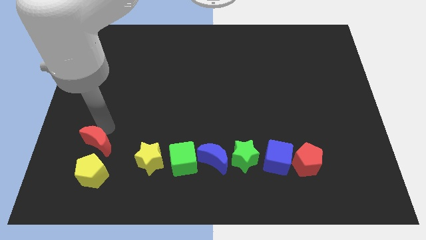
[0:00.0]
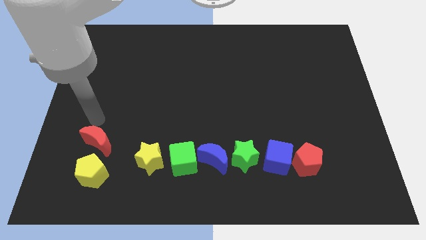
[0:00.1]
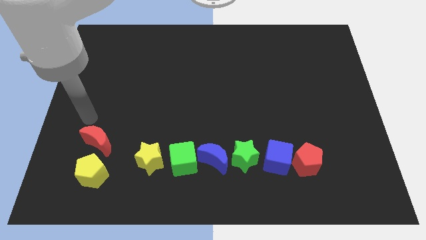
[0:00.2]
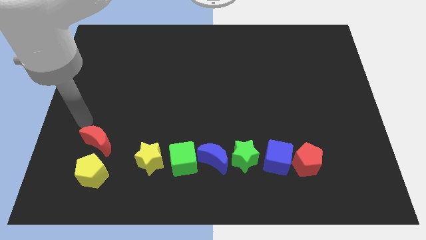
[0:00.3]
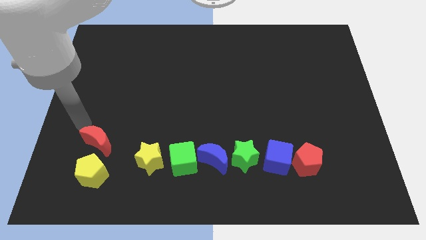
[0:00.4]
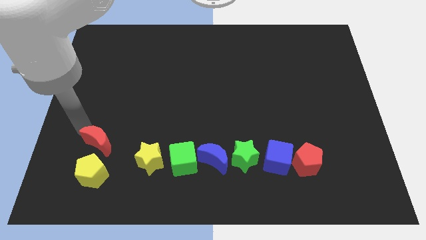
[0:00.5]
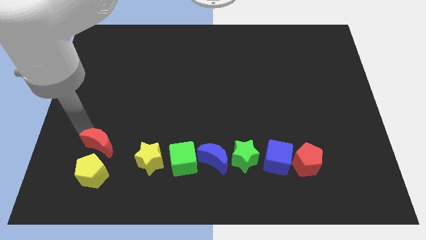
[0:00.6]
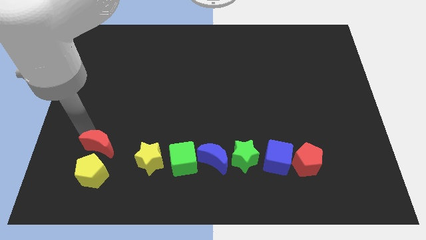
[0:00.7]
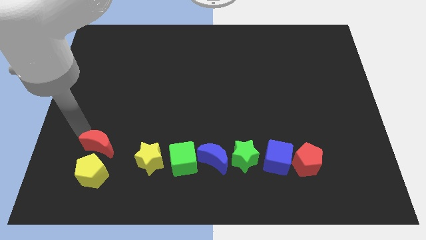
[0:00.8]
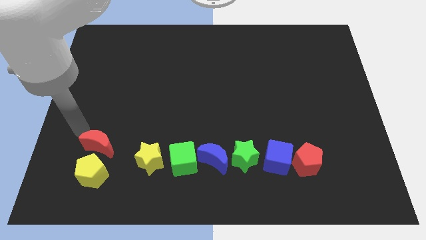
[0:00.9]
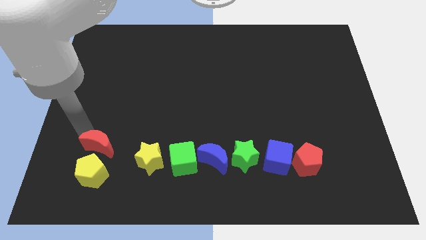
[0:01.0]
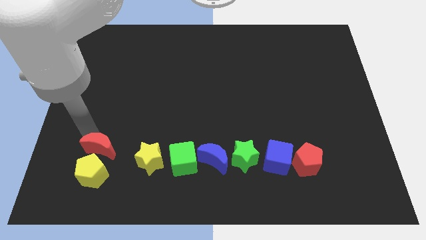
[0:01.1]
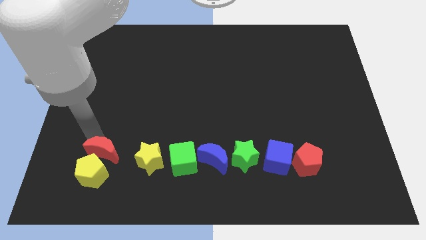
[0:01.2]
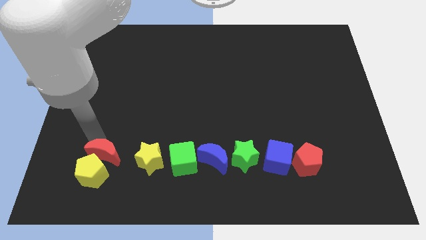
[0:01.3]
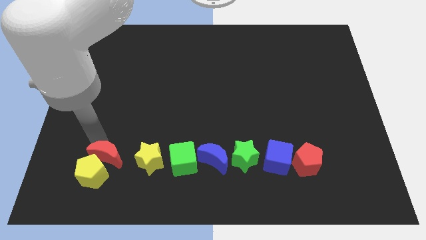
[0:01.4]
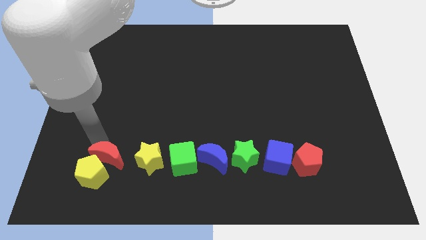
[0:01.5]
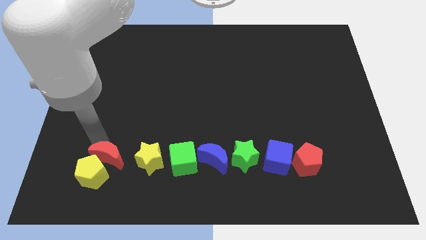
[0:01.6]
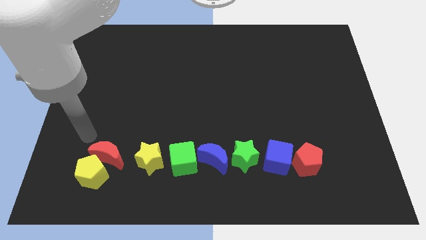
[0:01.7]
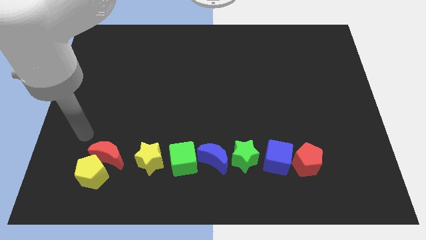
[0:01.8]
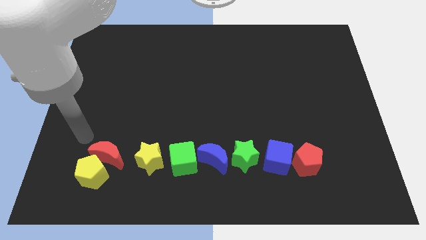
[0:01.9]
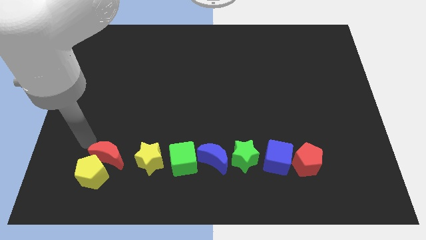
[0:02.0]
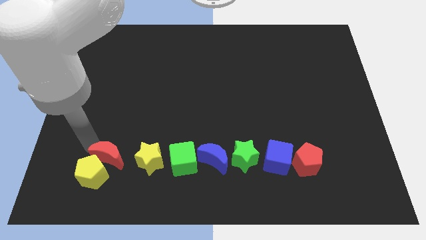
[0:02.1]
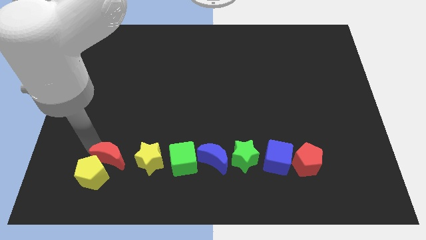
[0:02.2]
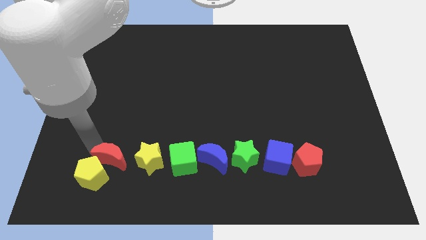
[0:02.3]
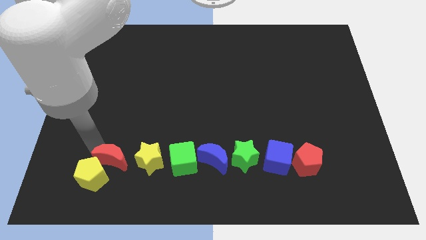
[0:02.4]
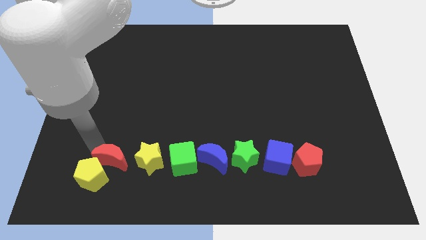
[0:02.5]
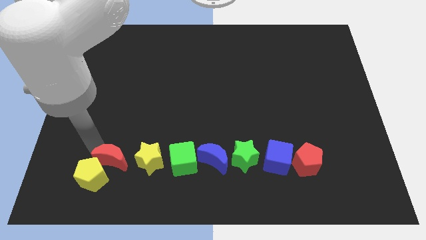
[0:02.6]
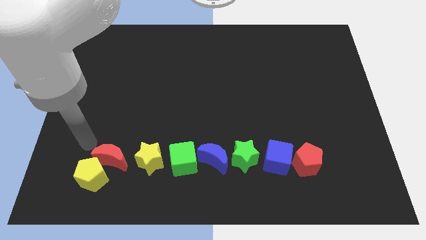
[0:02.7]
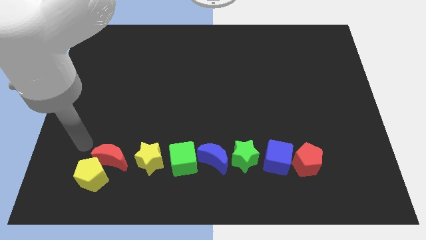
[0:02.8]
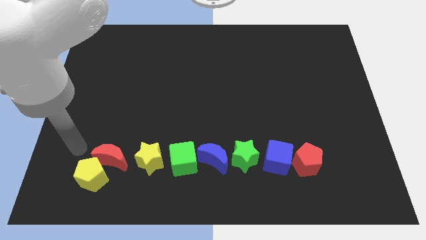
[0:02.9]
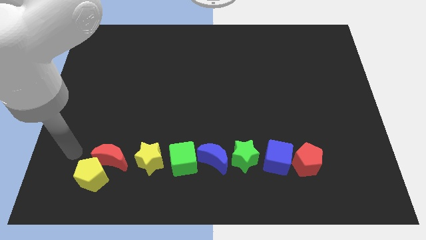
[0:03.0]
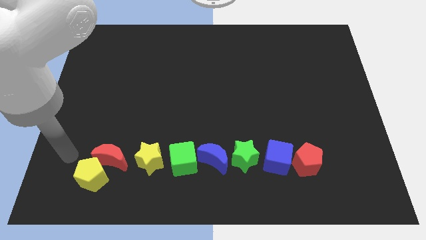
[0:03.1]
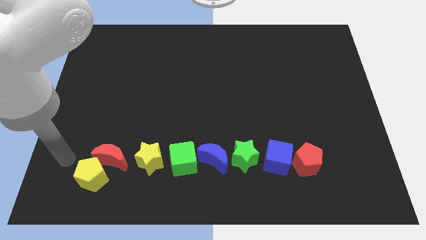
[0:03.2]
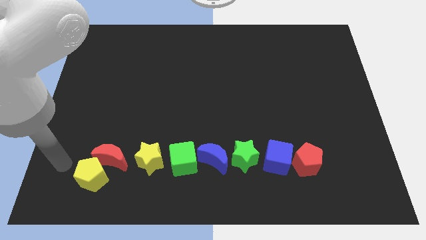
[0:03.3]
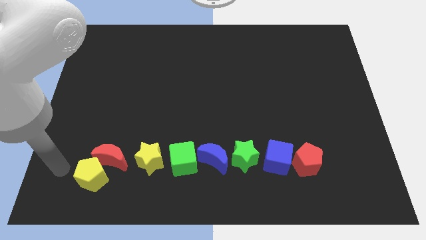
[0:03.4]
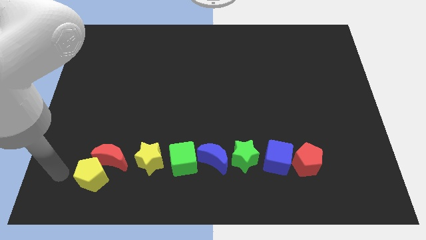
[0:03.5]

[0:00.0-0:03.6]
adjust the red crescent to the left of the yellow star

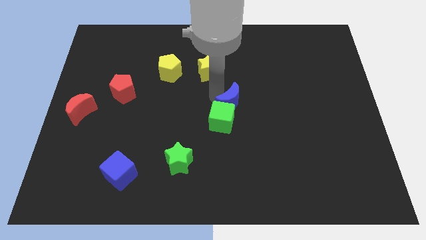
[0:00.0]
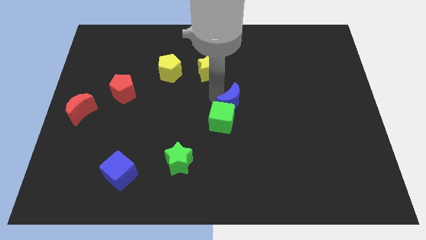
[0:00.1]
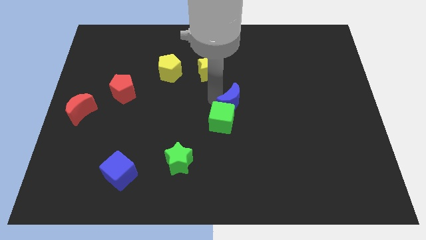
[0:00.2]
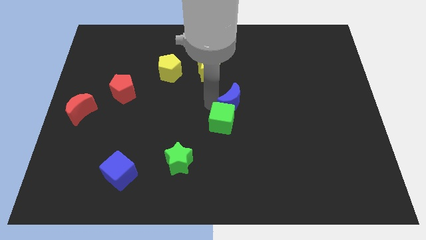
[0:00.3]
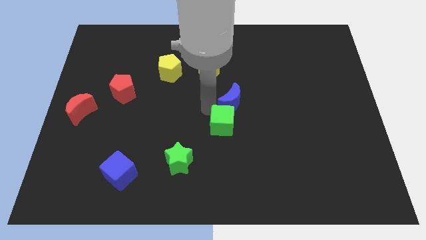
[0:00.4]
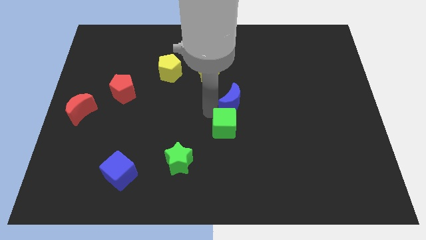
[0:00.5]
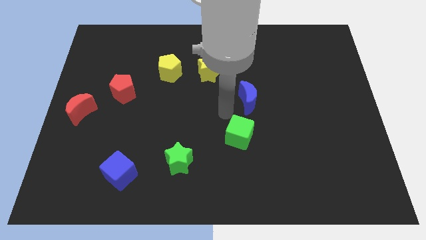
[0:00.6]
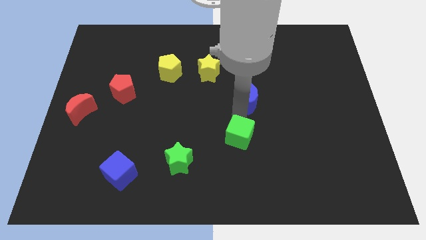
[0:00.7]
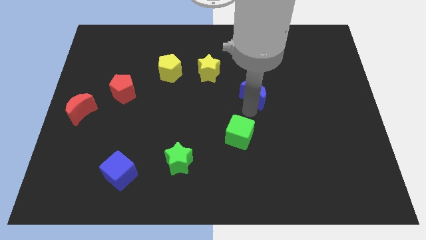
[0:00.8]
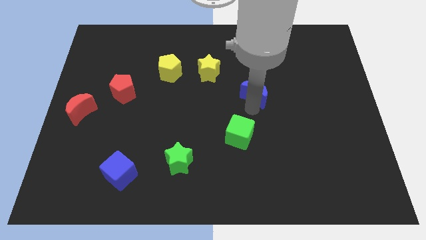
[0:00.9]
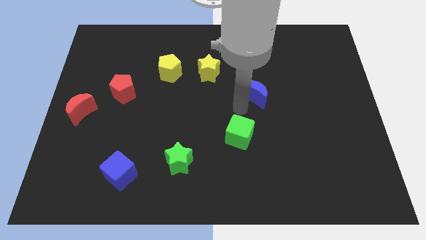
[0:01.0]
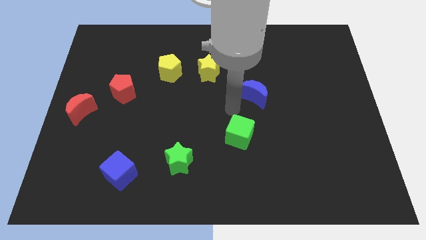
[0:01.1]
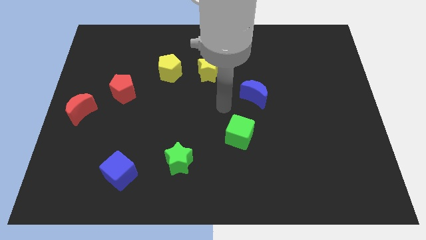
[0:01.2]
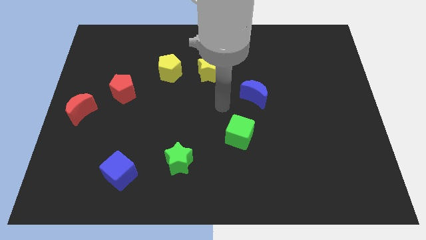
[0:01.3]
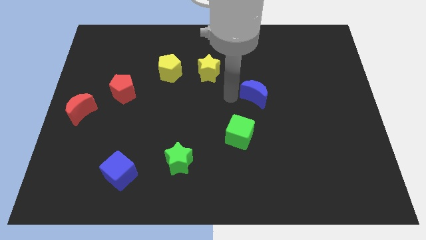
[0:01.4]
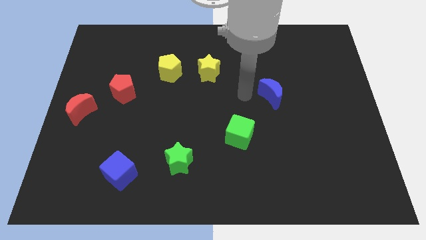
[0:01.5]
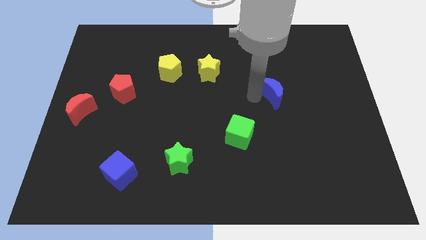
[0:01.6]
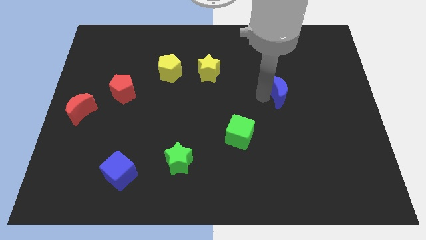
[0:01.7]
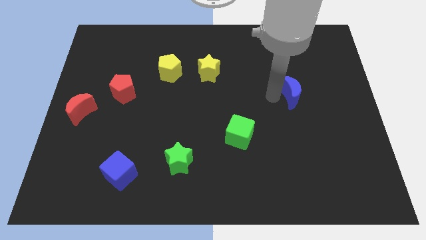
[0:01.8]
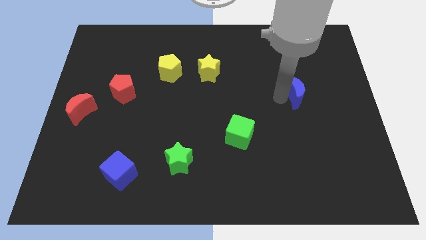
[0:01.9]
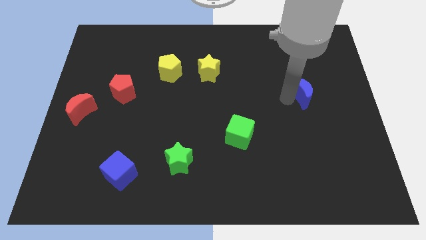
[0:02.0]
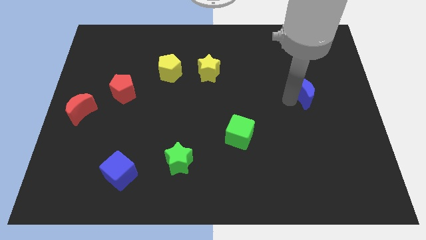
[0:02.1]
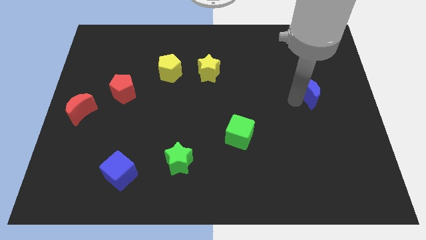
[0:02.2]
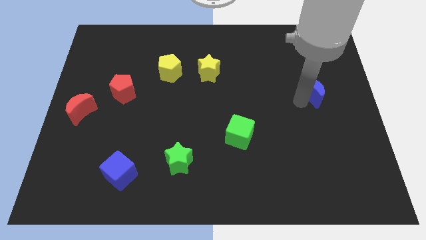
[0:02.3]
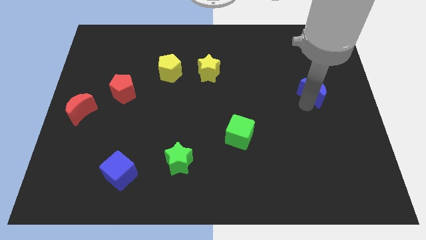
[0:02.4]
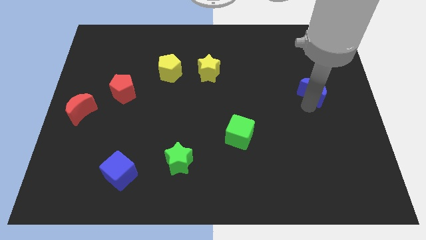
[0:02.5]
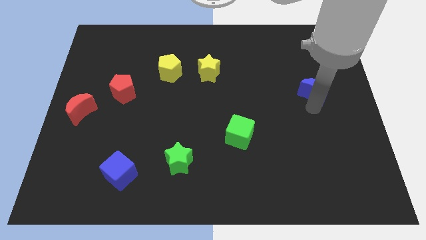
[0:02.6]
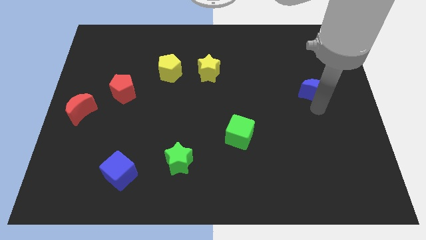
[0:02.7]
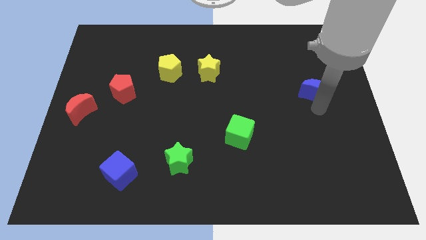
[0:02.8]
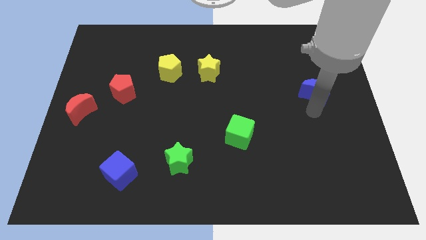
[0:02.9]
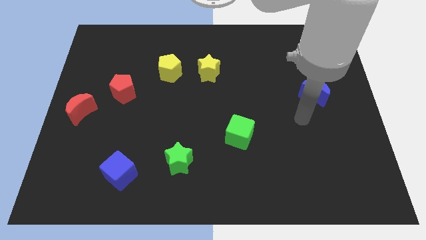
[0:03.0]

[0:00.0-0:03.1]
push the blue cube to the center right

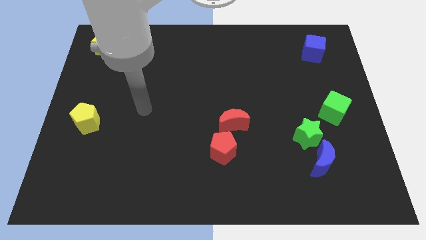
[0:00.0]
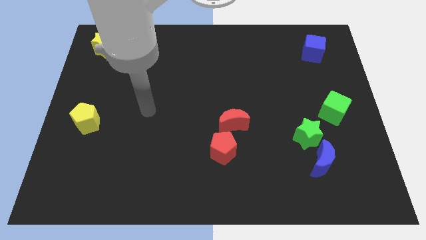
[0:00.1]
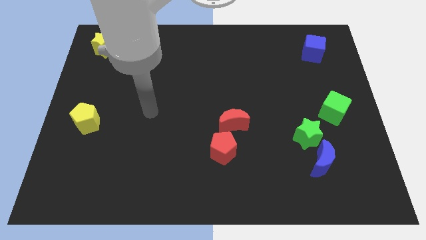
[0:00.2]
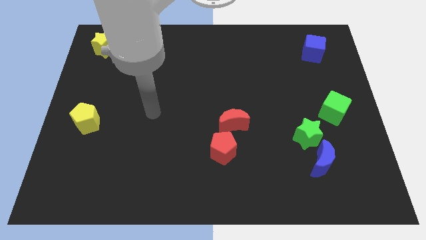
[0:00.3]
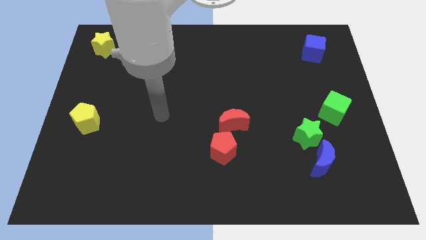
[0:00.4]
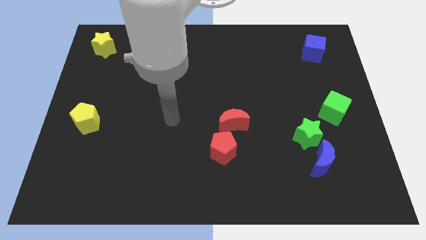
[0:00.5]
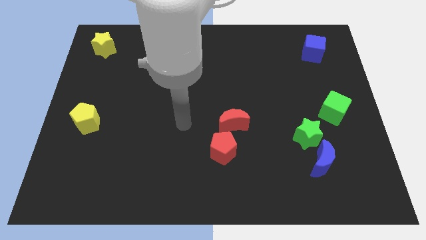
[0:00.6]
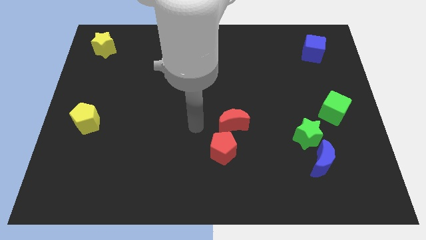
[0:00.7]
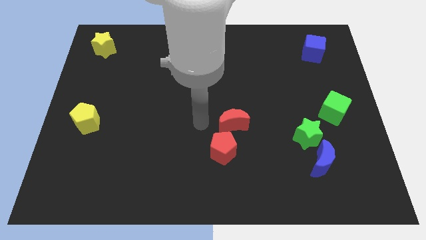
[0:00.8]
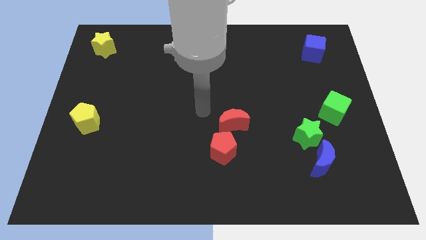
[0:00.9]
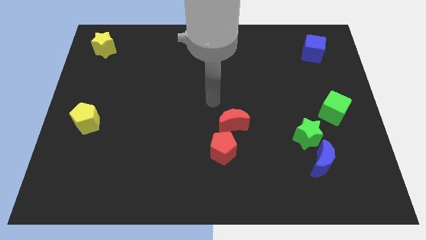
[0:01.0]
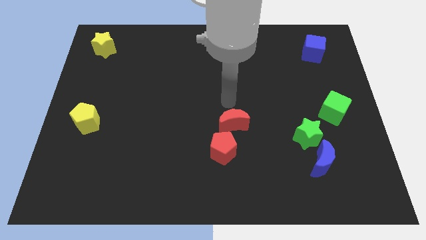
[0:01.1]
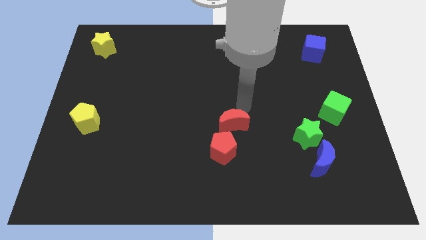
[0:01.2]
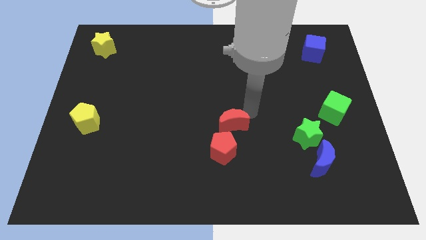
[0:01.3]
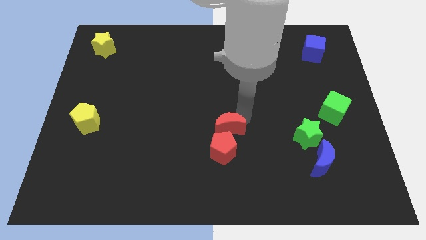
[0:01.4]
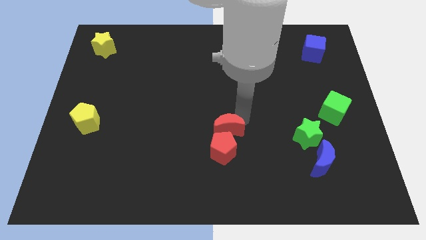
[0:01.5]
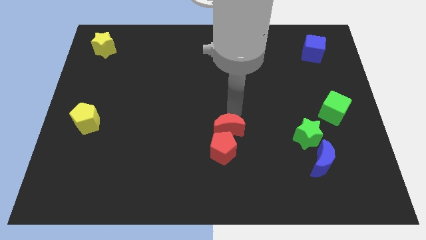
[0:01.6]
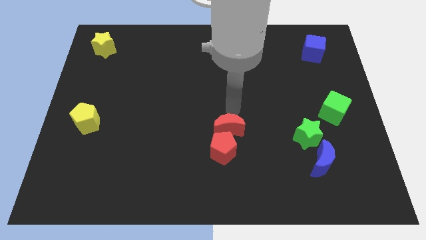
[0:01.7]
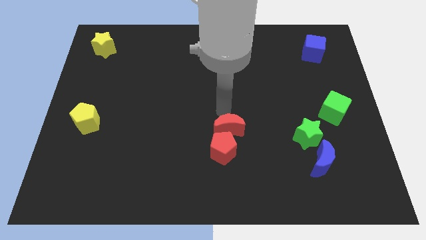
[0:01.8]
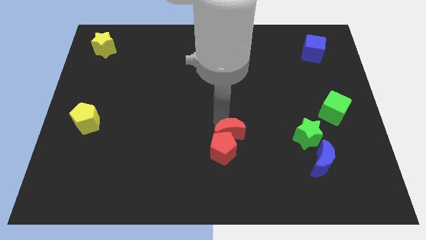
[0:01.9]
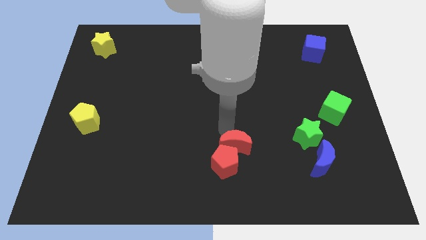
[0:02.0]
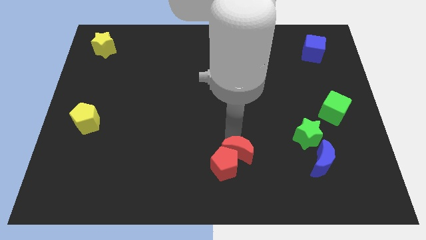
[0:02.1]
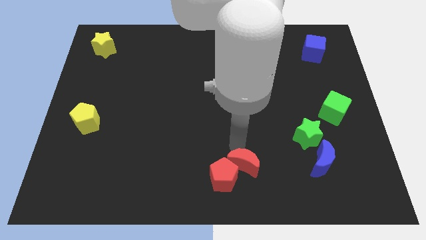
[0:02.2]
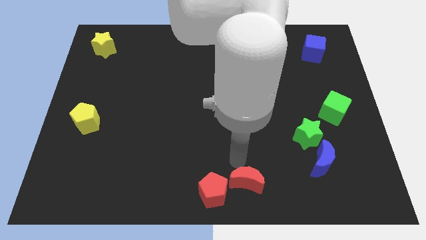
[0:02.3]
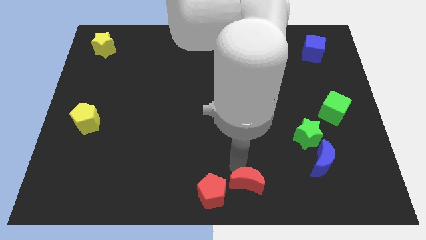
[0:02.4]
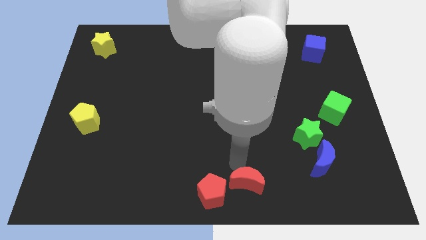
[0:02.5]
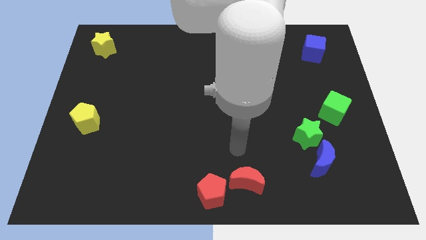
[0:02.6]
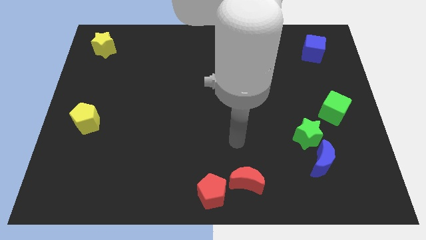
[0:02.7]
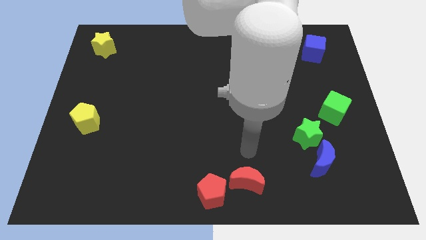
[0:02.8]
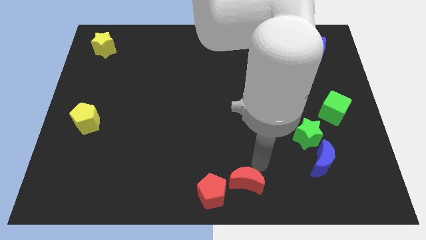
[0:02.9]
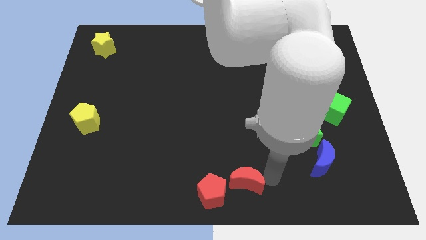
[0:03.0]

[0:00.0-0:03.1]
move red blocks towards bottom center
